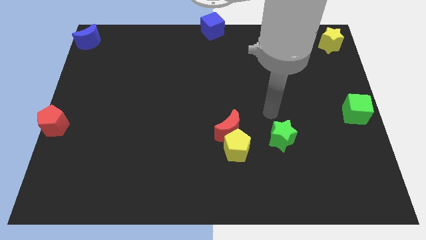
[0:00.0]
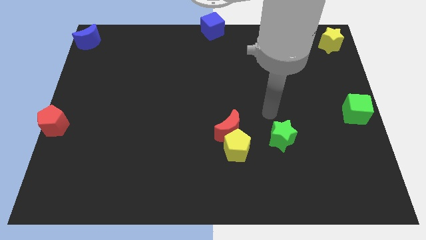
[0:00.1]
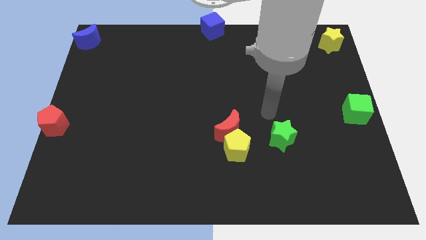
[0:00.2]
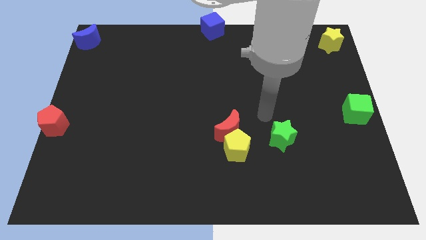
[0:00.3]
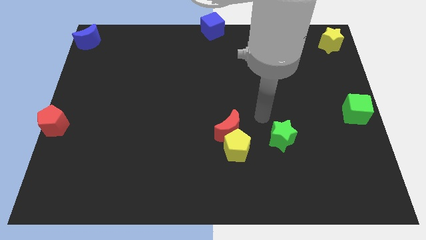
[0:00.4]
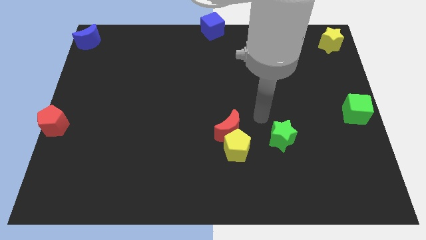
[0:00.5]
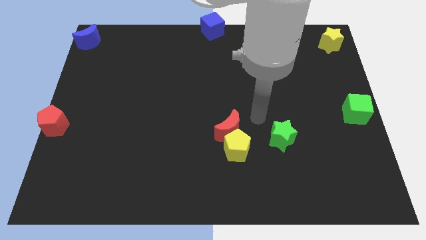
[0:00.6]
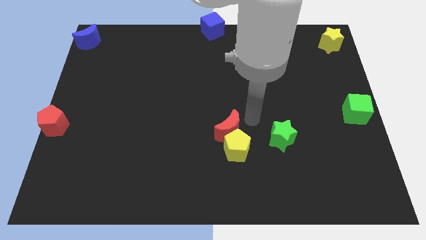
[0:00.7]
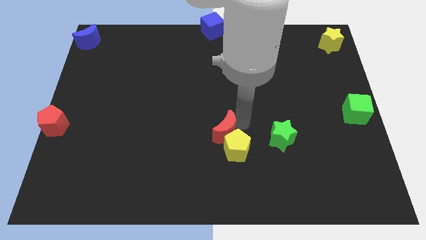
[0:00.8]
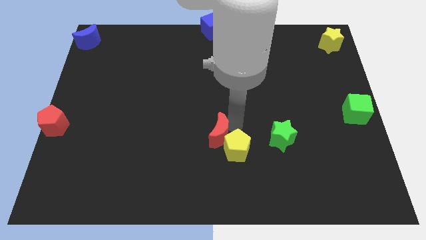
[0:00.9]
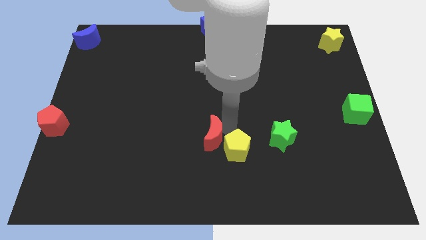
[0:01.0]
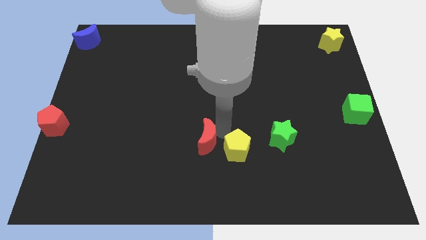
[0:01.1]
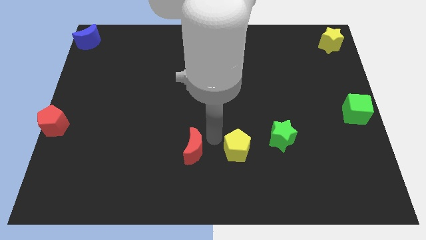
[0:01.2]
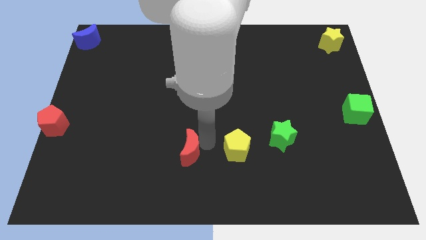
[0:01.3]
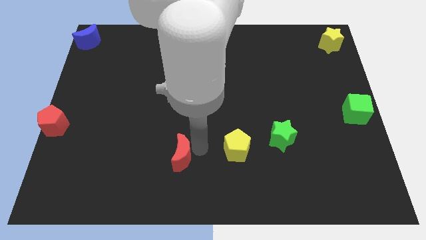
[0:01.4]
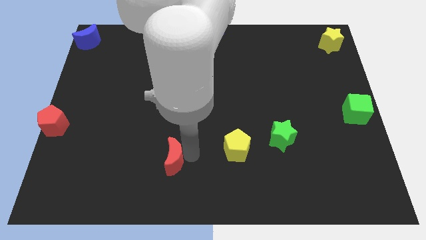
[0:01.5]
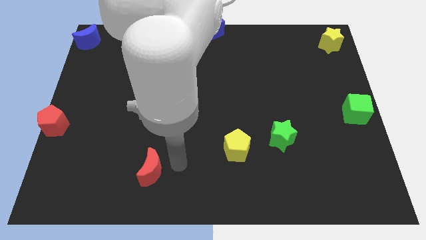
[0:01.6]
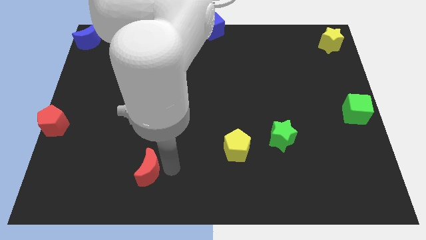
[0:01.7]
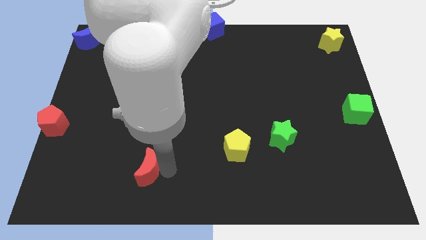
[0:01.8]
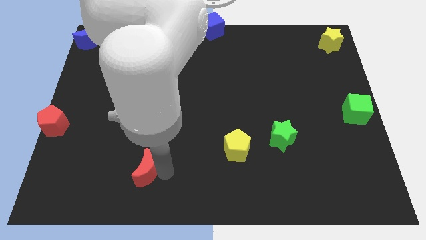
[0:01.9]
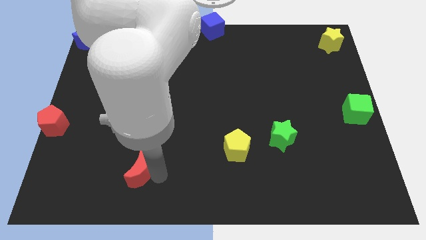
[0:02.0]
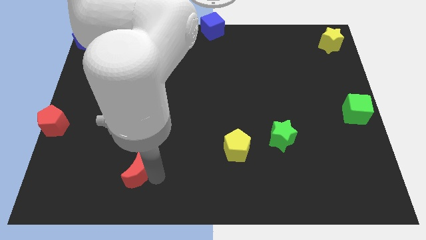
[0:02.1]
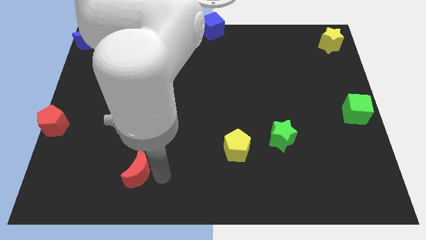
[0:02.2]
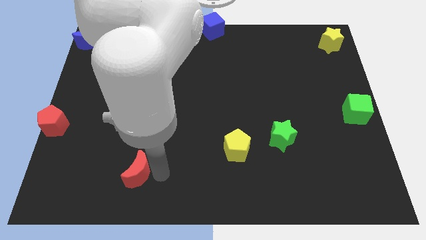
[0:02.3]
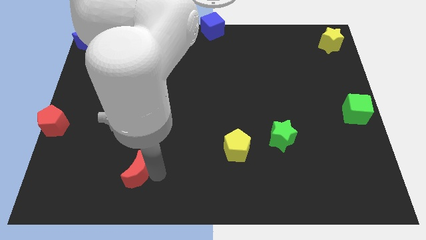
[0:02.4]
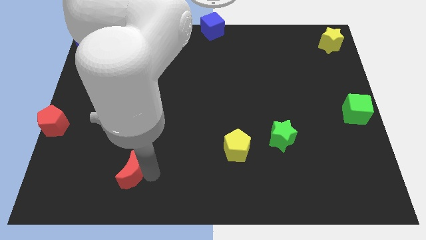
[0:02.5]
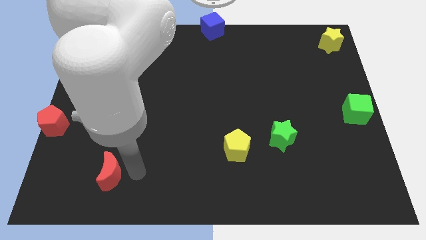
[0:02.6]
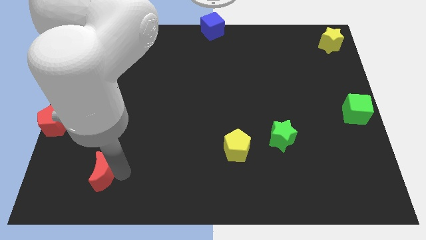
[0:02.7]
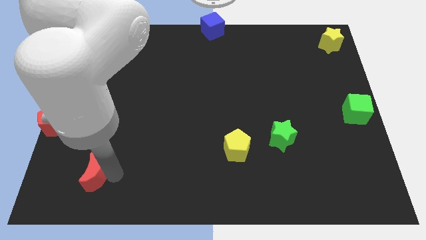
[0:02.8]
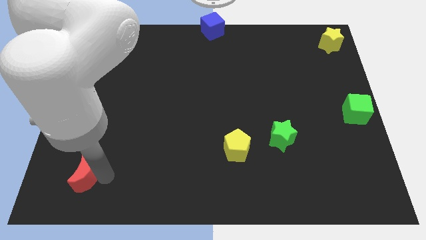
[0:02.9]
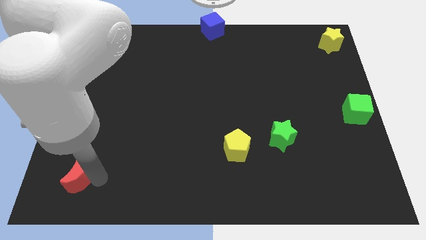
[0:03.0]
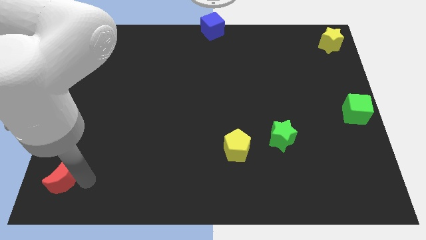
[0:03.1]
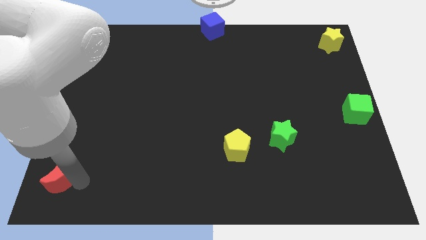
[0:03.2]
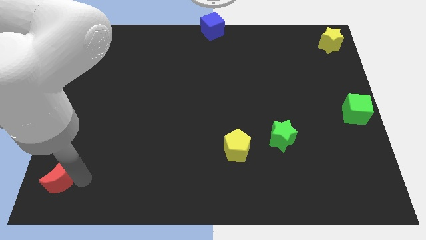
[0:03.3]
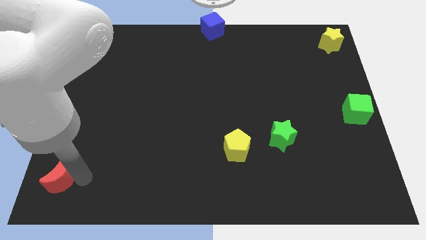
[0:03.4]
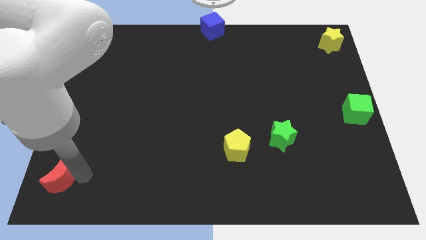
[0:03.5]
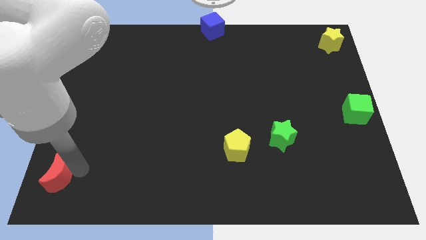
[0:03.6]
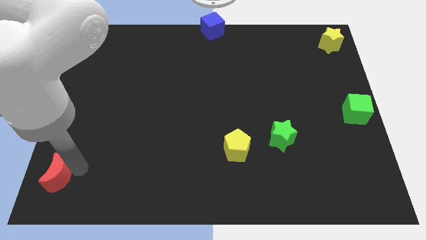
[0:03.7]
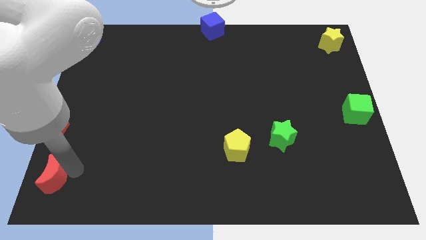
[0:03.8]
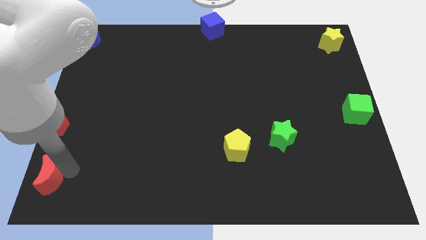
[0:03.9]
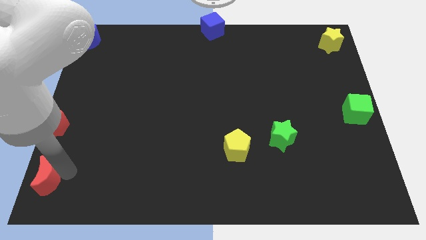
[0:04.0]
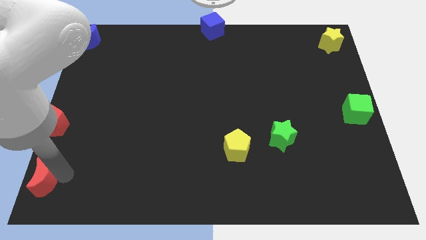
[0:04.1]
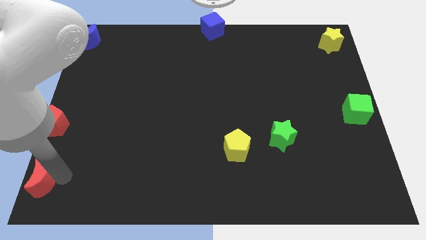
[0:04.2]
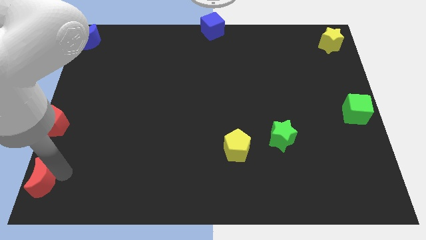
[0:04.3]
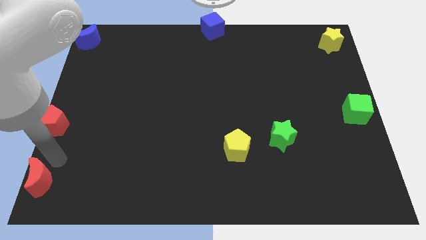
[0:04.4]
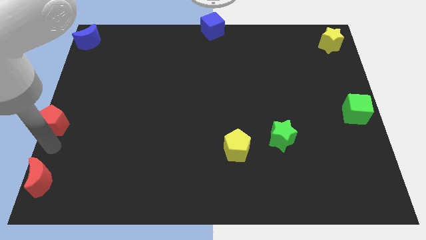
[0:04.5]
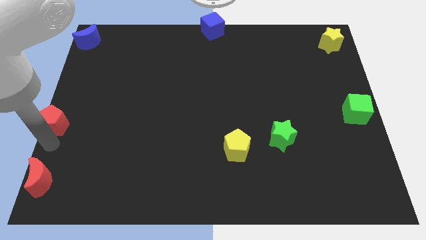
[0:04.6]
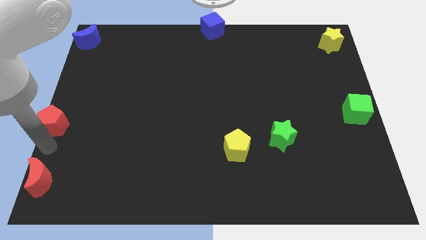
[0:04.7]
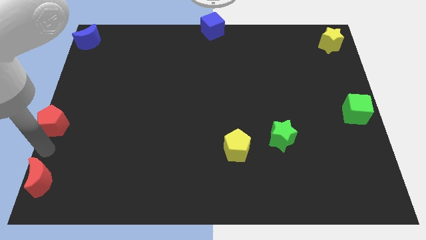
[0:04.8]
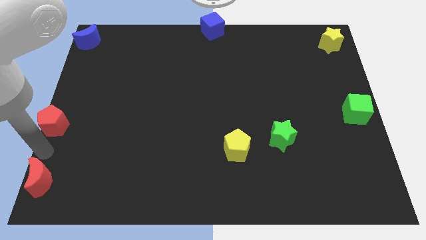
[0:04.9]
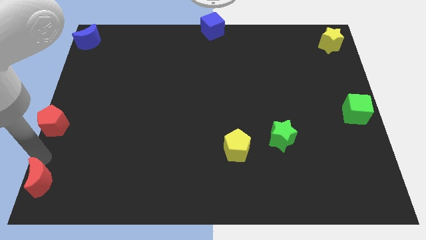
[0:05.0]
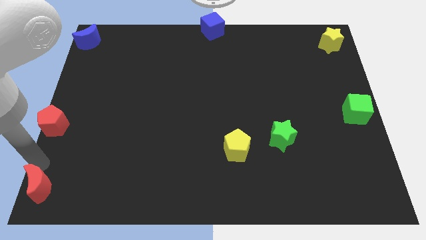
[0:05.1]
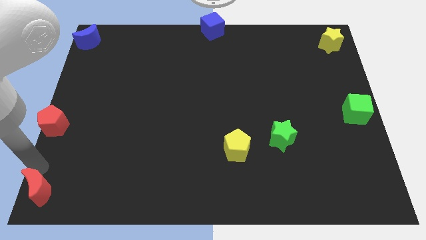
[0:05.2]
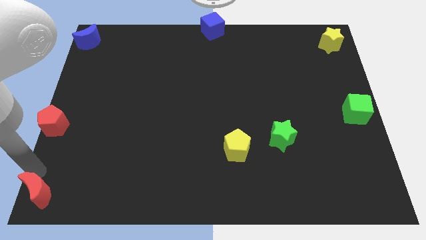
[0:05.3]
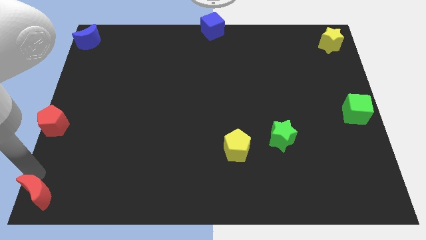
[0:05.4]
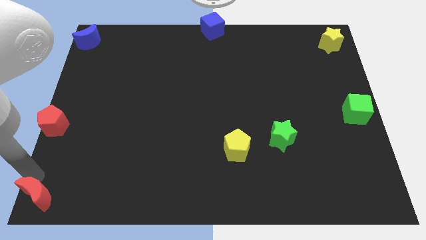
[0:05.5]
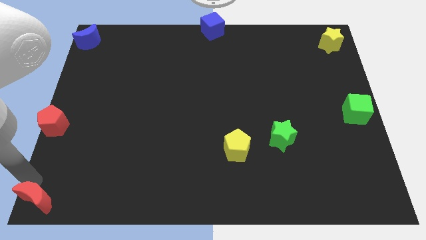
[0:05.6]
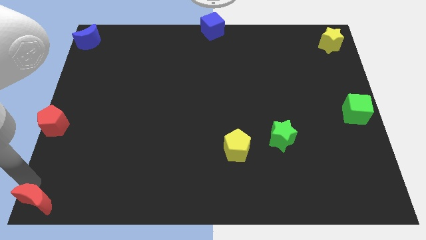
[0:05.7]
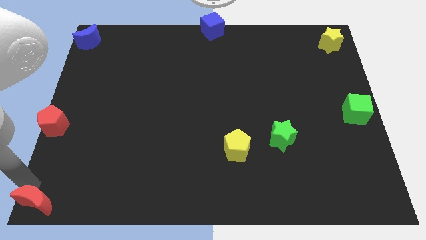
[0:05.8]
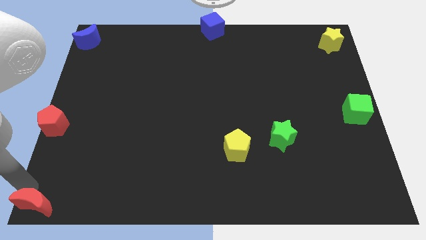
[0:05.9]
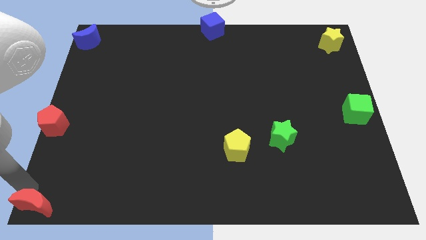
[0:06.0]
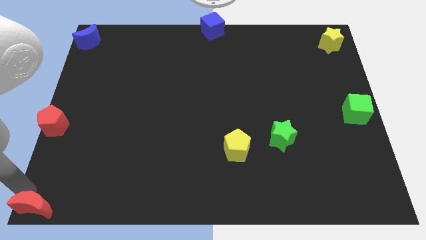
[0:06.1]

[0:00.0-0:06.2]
push red crescent to the bottom left corner of the board

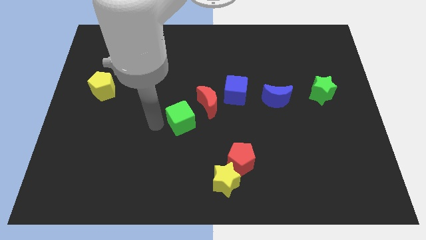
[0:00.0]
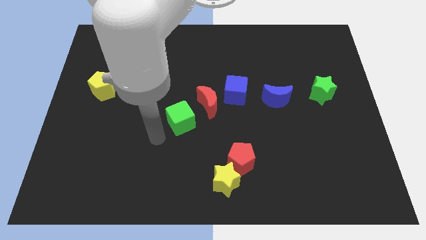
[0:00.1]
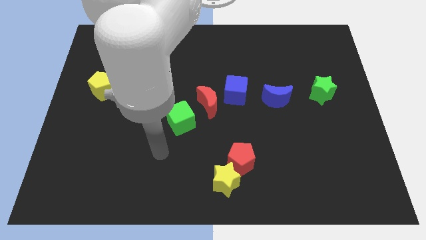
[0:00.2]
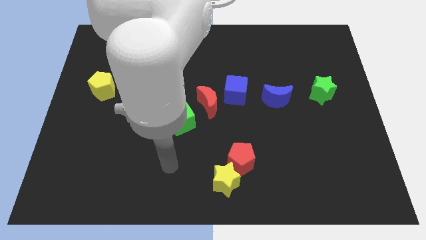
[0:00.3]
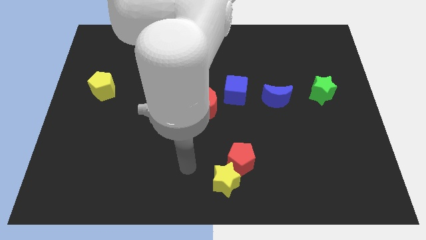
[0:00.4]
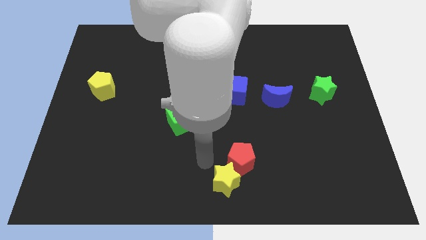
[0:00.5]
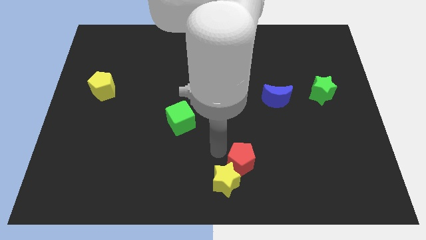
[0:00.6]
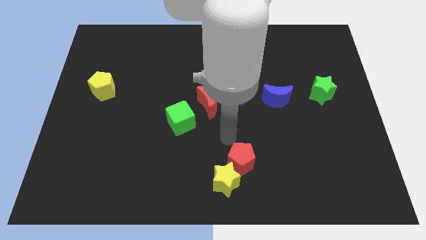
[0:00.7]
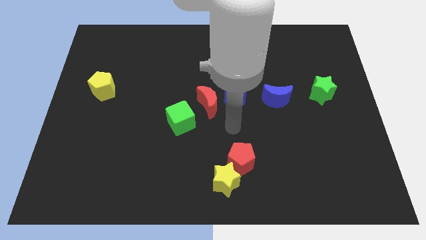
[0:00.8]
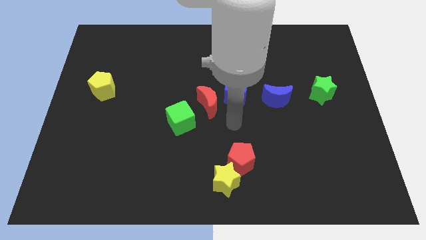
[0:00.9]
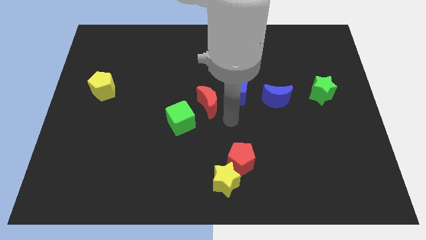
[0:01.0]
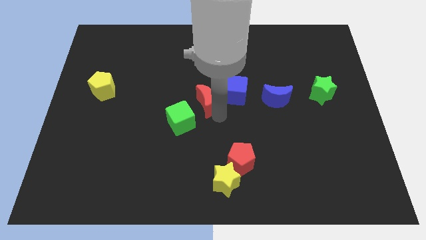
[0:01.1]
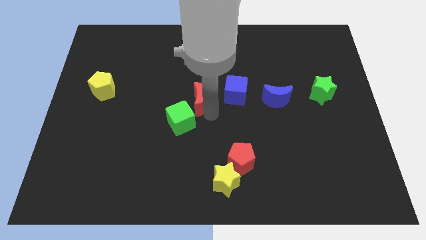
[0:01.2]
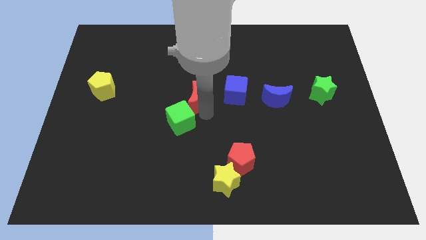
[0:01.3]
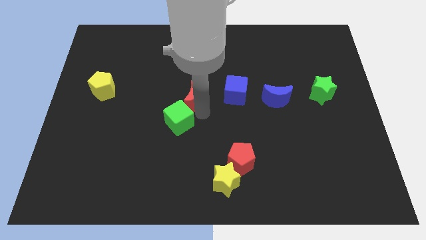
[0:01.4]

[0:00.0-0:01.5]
move the red moon to the top right side of the green cube

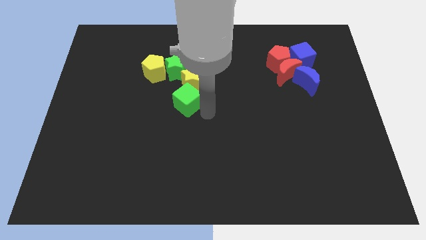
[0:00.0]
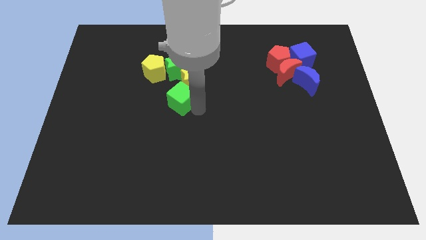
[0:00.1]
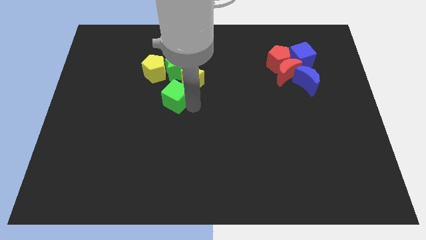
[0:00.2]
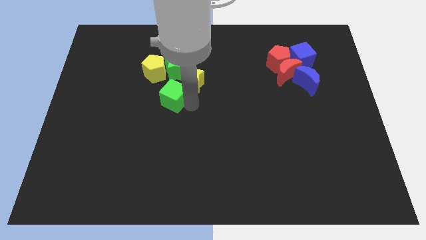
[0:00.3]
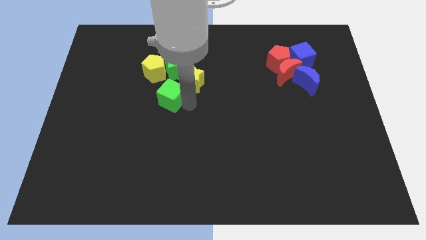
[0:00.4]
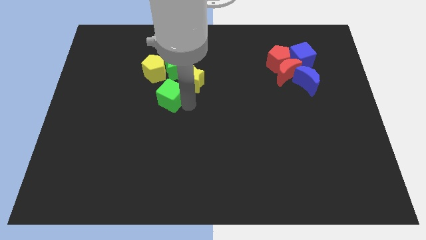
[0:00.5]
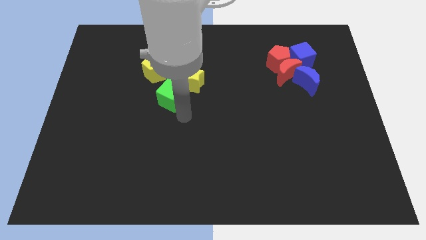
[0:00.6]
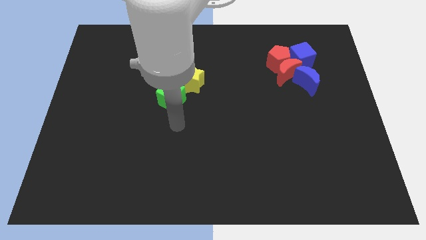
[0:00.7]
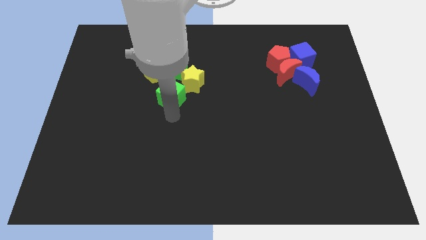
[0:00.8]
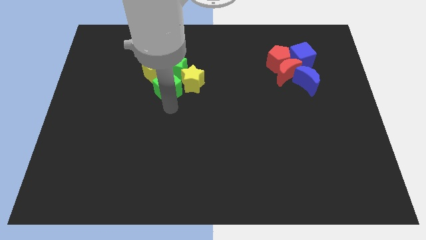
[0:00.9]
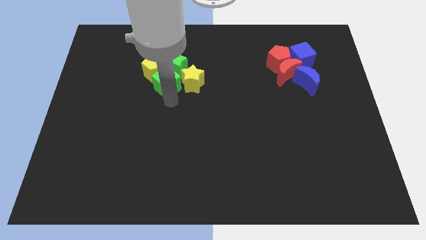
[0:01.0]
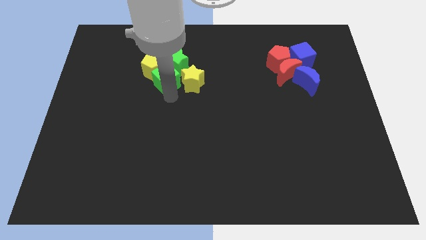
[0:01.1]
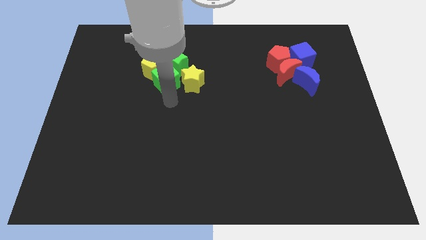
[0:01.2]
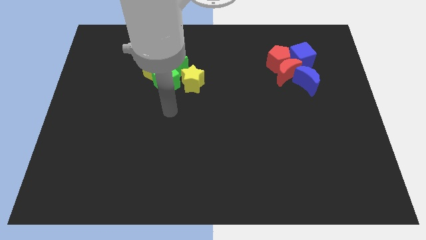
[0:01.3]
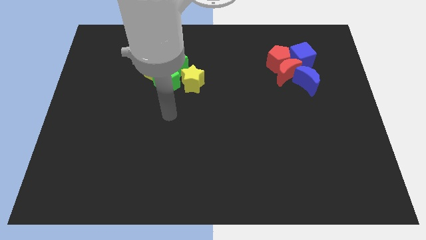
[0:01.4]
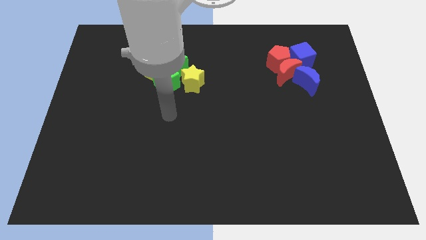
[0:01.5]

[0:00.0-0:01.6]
push the green cube close to the group of blocks
